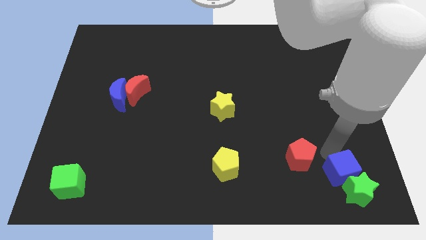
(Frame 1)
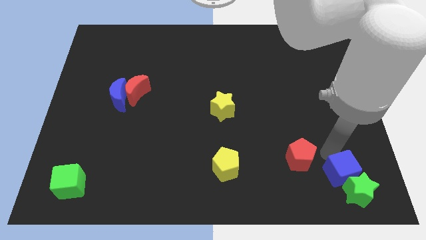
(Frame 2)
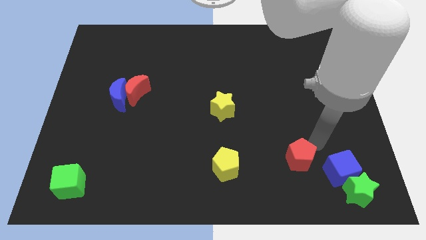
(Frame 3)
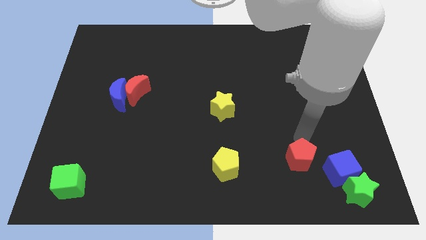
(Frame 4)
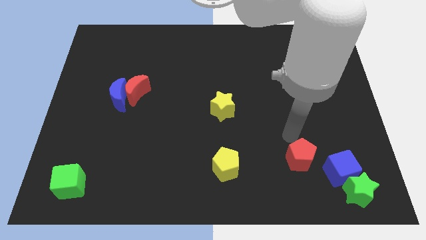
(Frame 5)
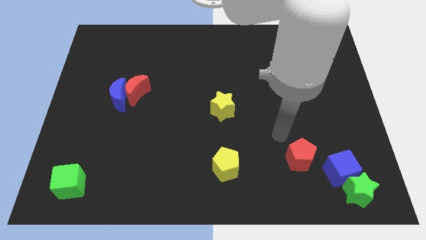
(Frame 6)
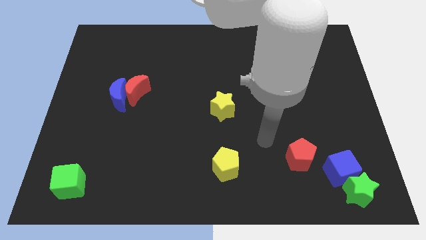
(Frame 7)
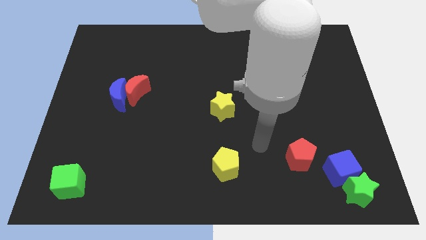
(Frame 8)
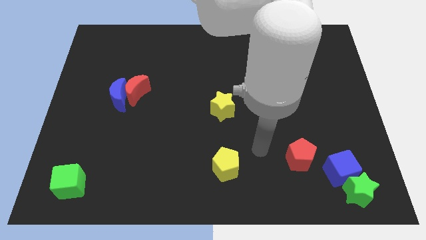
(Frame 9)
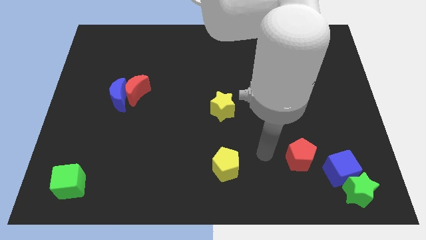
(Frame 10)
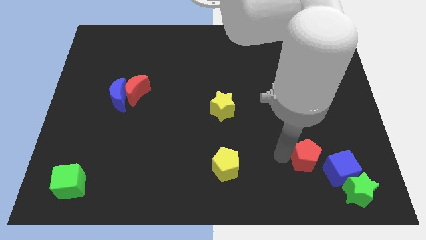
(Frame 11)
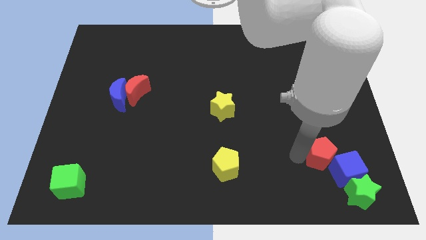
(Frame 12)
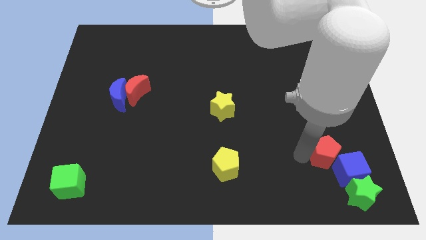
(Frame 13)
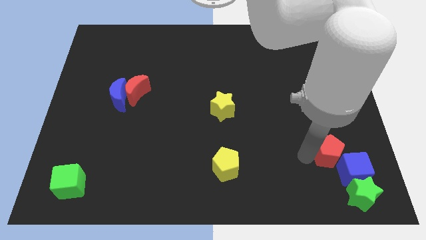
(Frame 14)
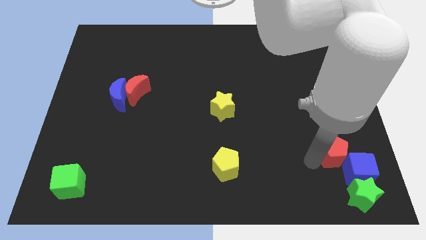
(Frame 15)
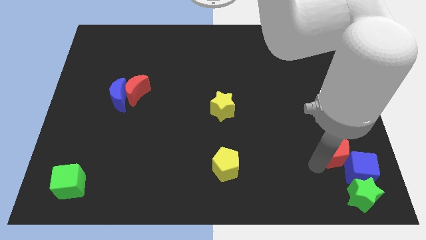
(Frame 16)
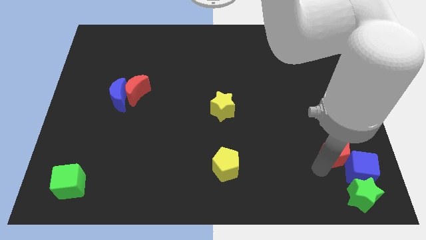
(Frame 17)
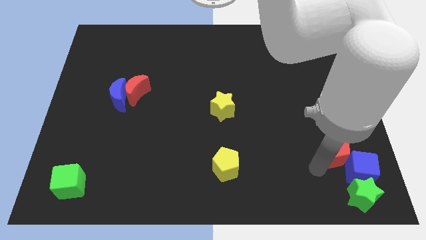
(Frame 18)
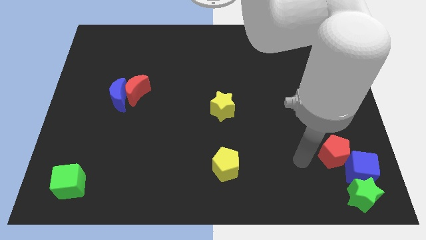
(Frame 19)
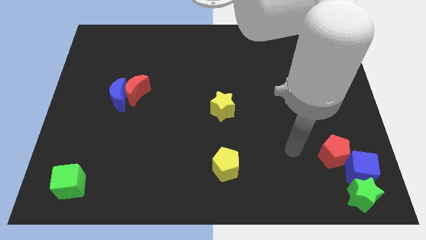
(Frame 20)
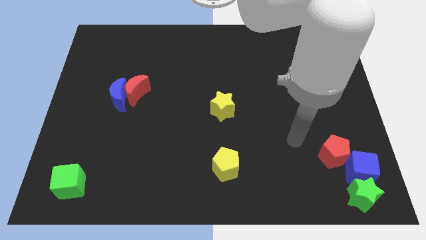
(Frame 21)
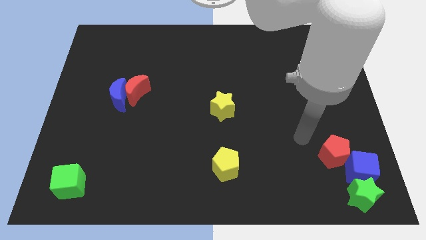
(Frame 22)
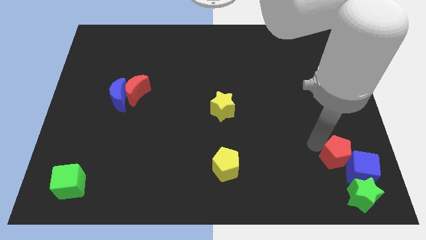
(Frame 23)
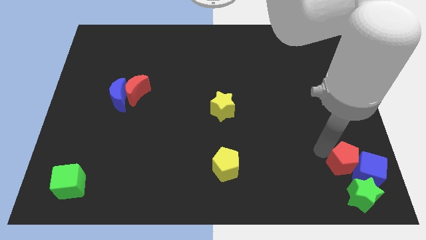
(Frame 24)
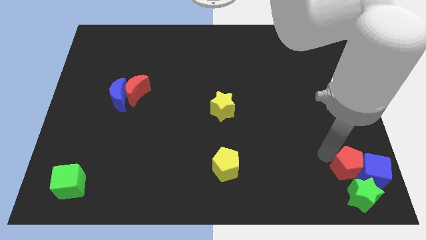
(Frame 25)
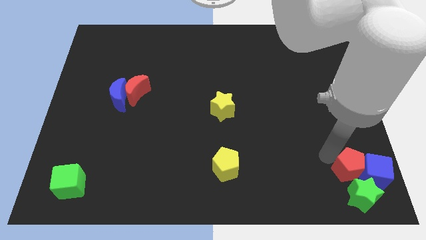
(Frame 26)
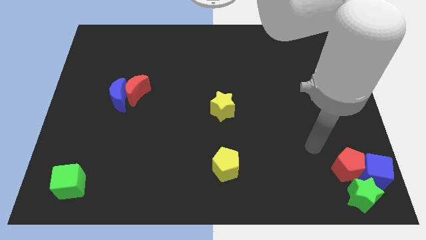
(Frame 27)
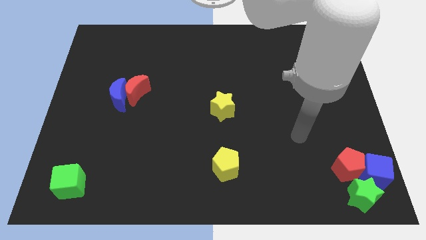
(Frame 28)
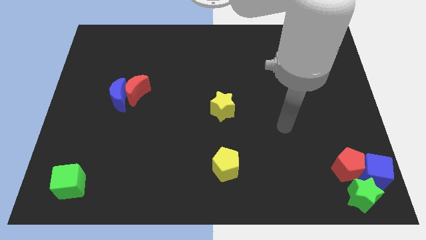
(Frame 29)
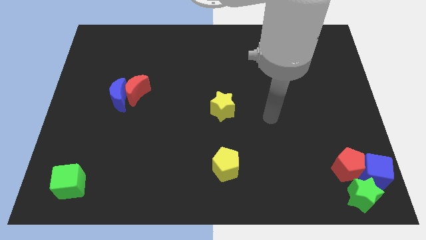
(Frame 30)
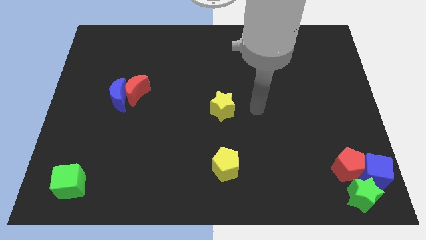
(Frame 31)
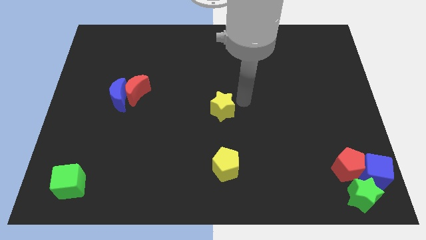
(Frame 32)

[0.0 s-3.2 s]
slide the red pentagon into blue cube

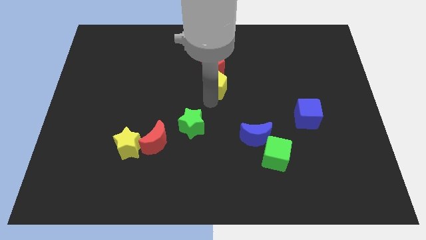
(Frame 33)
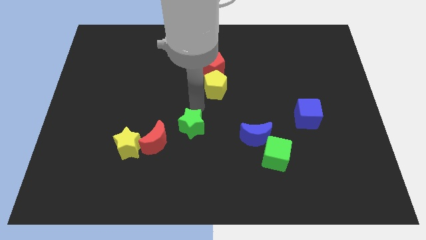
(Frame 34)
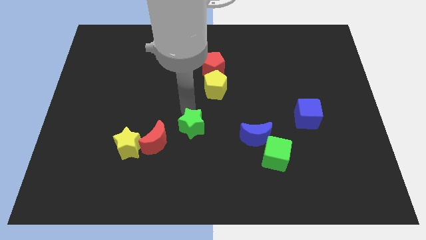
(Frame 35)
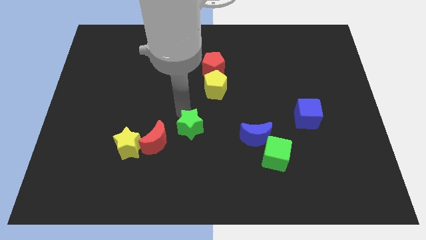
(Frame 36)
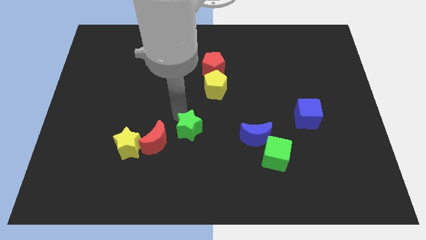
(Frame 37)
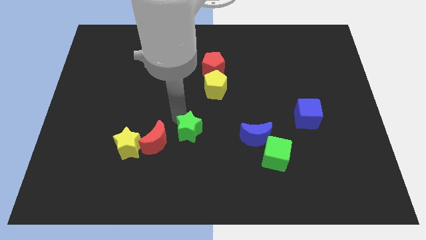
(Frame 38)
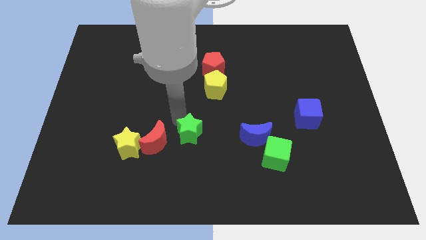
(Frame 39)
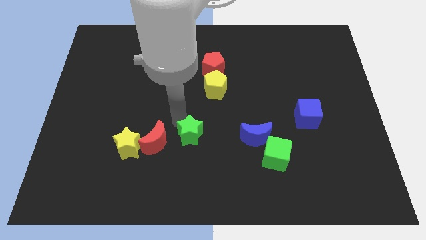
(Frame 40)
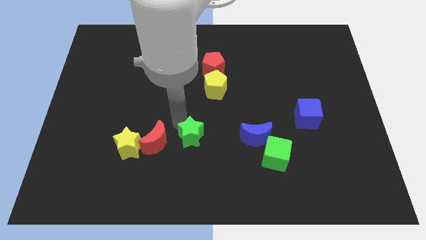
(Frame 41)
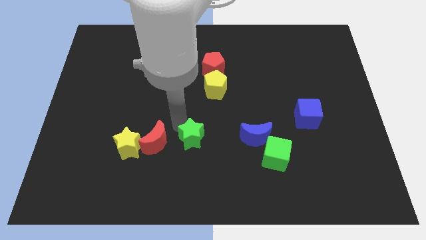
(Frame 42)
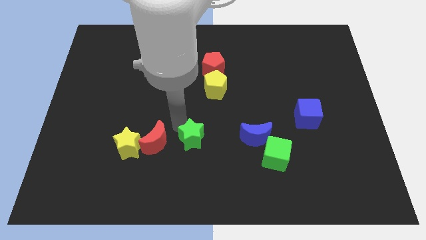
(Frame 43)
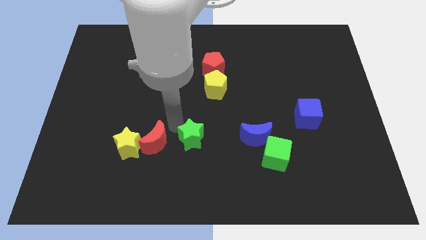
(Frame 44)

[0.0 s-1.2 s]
put the green star parallel right to the red moon

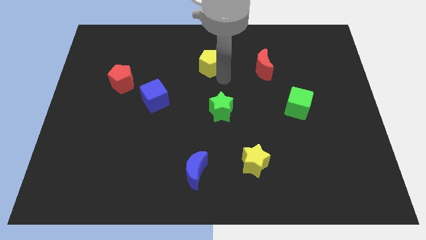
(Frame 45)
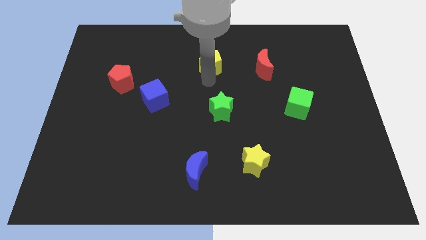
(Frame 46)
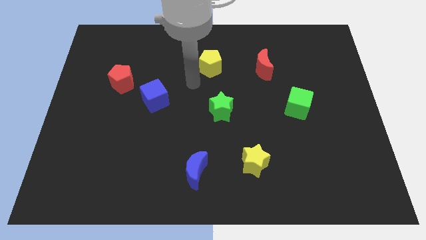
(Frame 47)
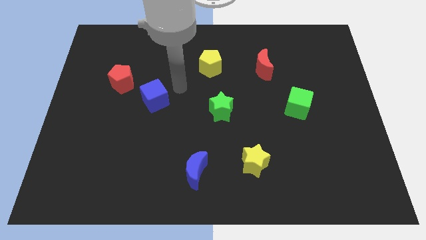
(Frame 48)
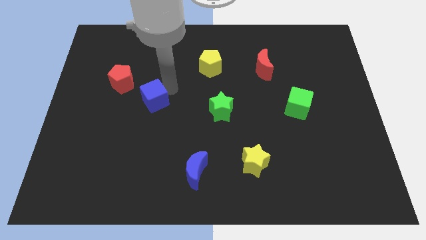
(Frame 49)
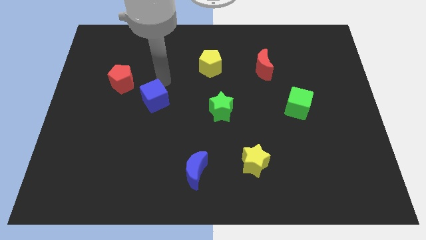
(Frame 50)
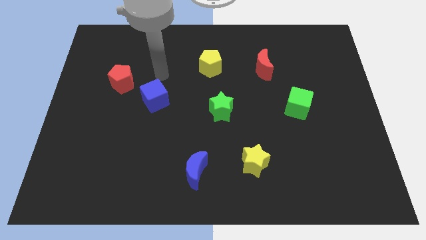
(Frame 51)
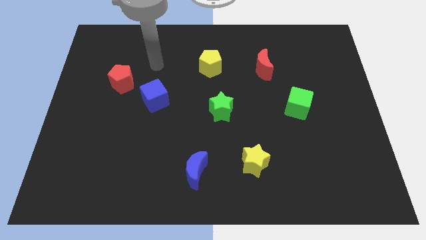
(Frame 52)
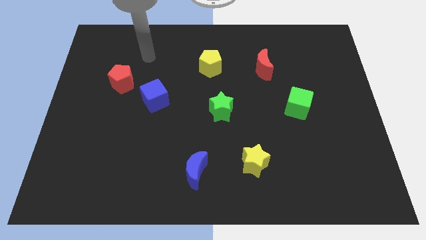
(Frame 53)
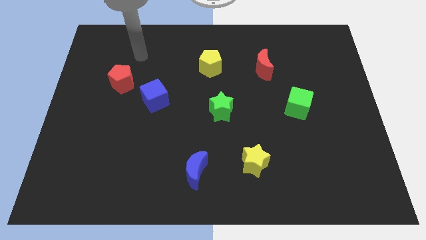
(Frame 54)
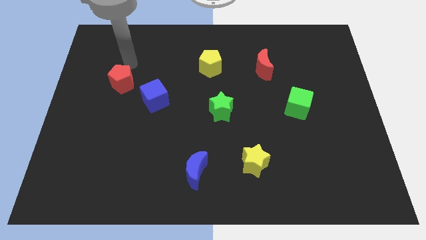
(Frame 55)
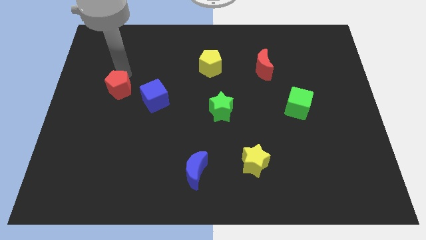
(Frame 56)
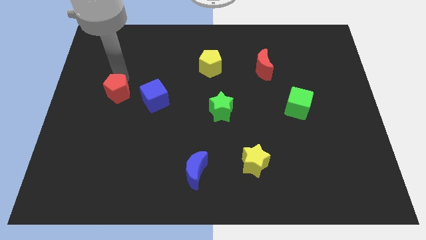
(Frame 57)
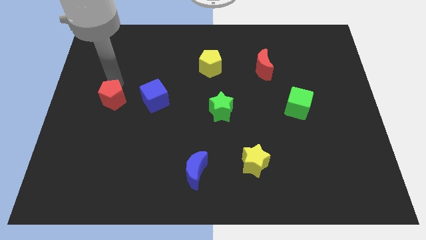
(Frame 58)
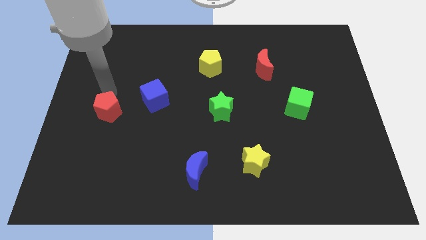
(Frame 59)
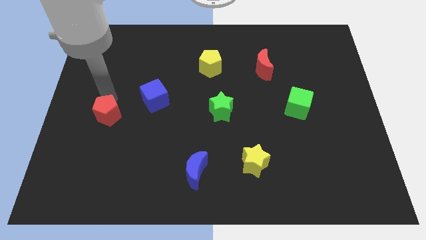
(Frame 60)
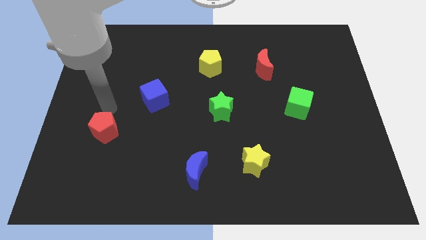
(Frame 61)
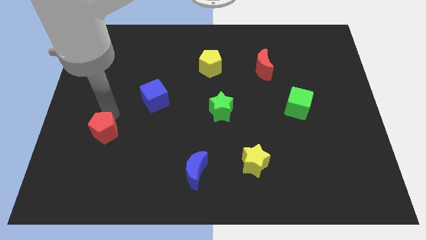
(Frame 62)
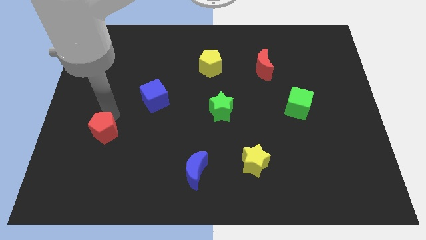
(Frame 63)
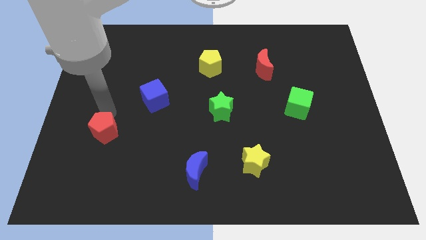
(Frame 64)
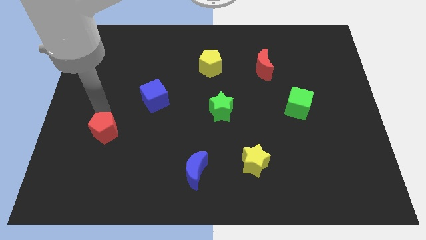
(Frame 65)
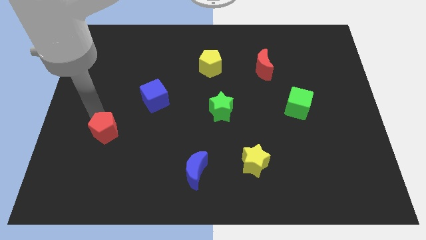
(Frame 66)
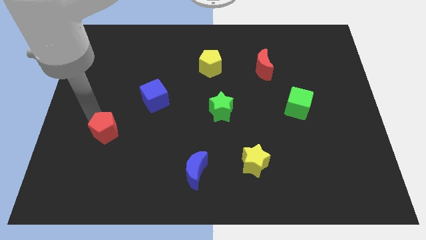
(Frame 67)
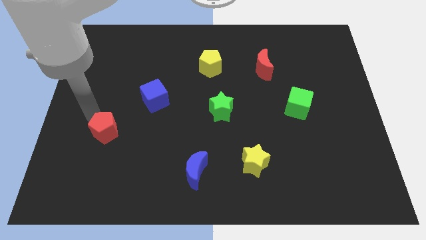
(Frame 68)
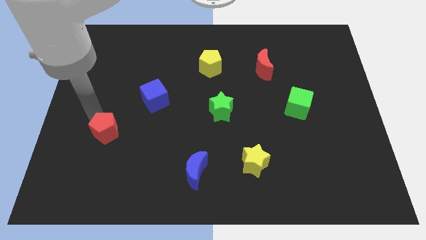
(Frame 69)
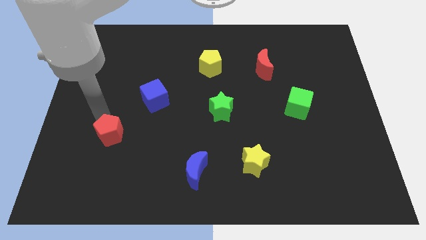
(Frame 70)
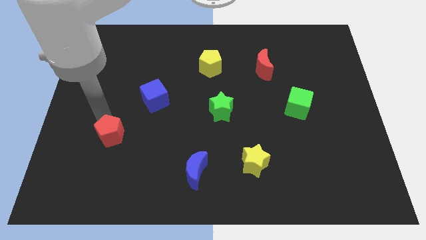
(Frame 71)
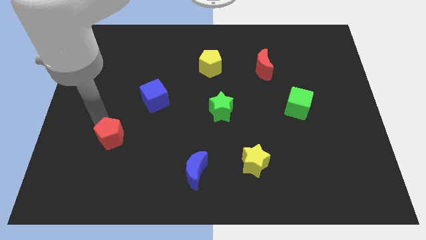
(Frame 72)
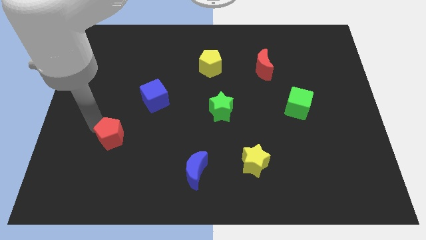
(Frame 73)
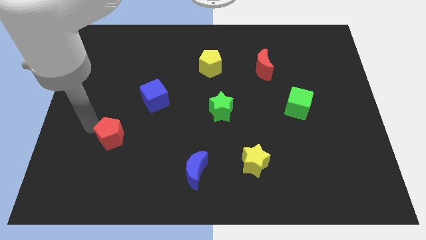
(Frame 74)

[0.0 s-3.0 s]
move the red pentagon at the bottom left side of the blue cube

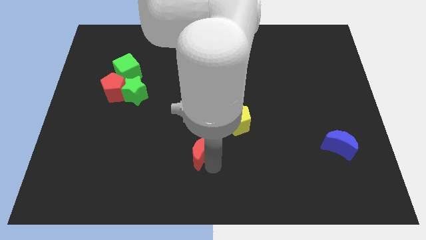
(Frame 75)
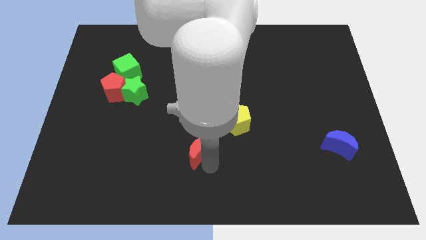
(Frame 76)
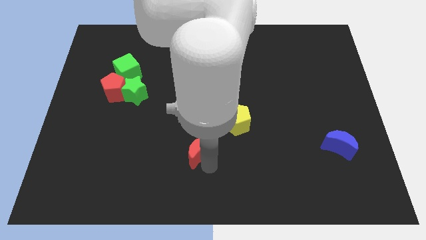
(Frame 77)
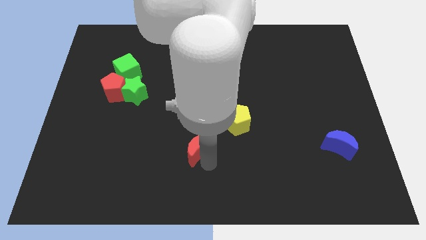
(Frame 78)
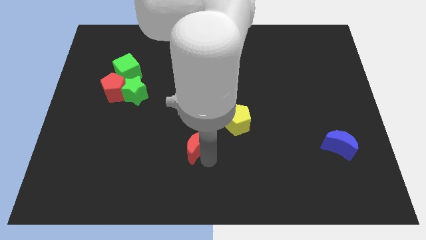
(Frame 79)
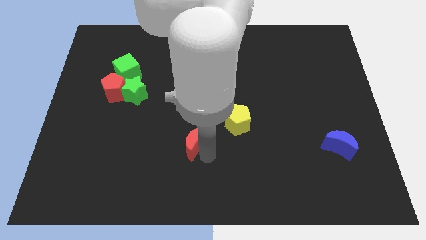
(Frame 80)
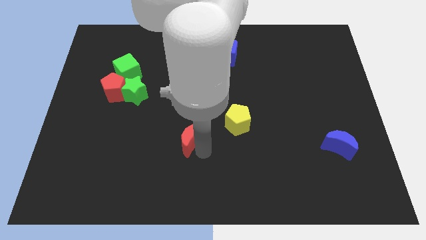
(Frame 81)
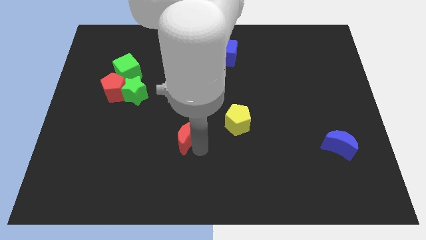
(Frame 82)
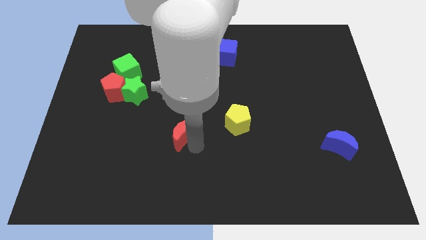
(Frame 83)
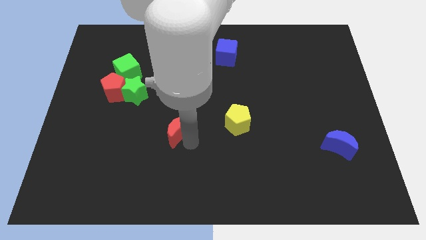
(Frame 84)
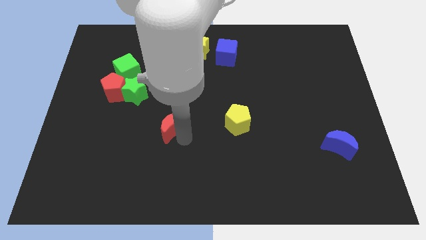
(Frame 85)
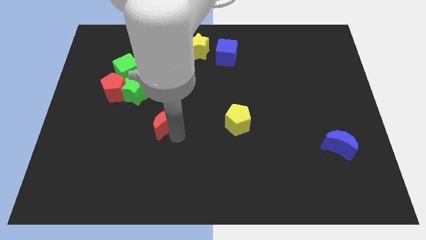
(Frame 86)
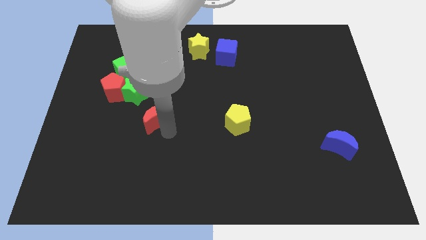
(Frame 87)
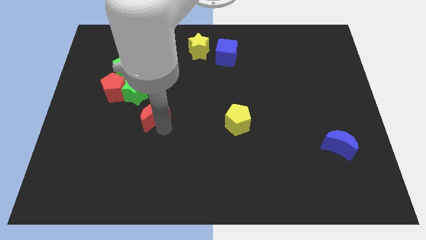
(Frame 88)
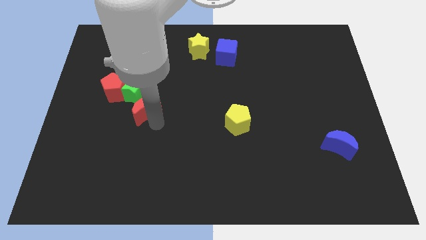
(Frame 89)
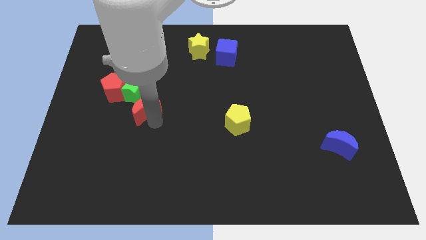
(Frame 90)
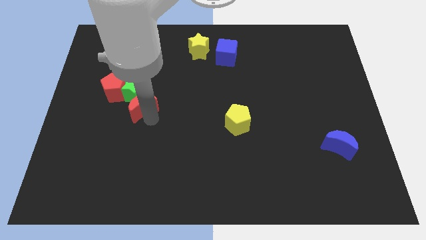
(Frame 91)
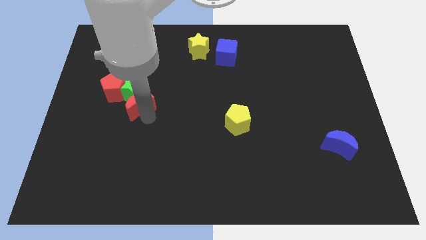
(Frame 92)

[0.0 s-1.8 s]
move the red moon into the green star

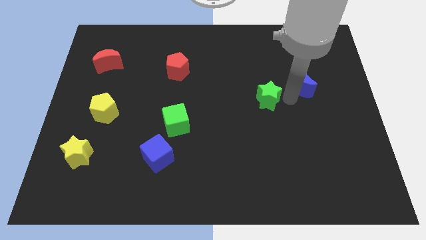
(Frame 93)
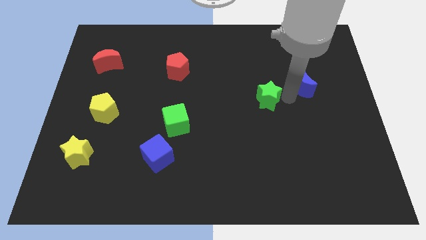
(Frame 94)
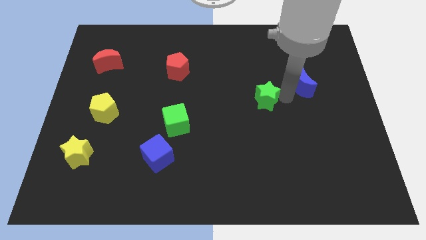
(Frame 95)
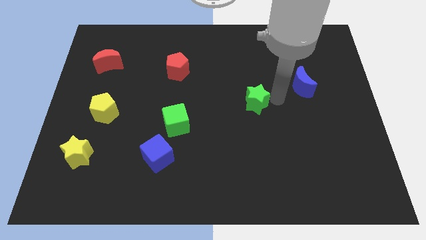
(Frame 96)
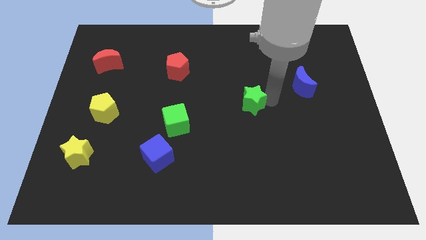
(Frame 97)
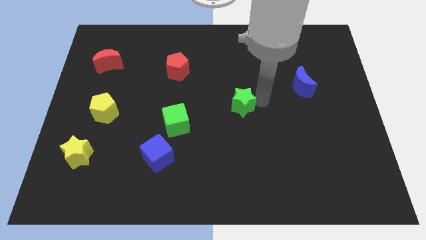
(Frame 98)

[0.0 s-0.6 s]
move green star towards center
